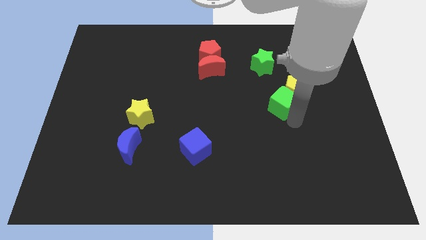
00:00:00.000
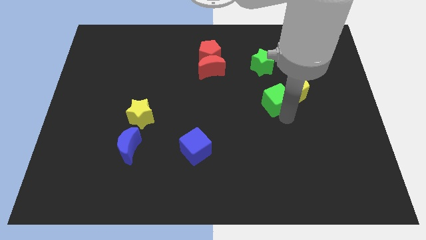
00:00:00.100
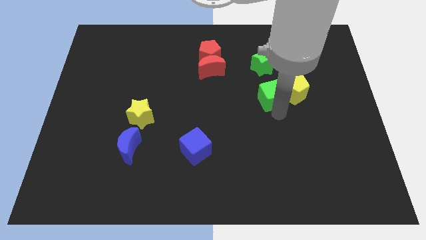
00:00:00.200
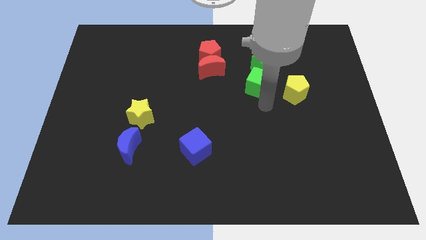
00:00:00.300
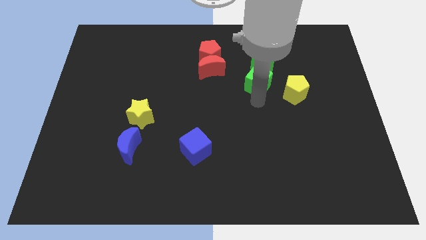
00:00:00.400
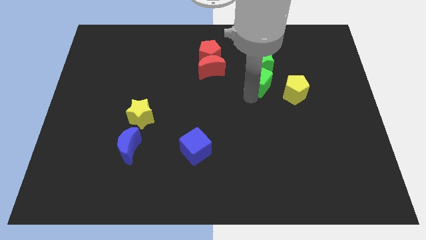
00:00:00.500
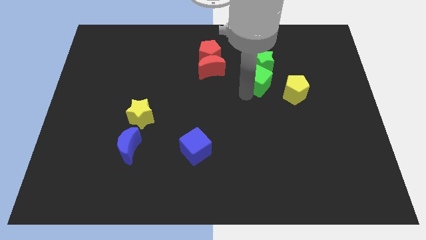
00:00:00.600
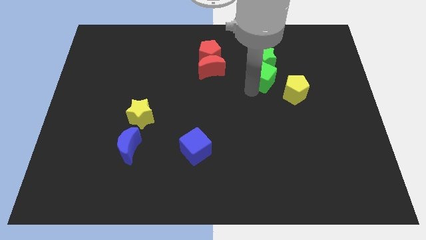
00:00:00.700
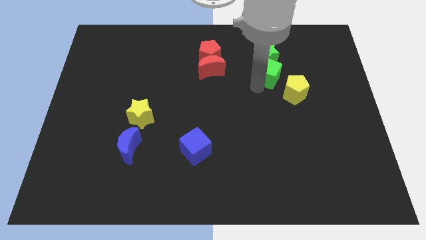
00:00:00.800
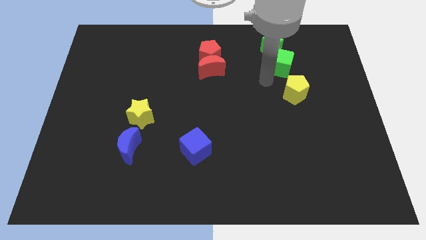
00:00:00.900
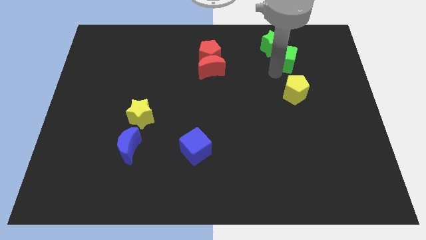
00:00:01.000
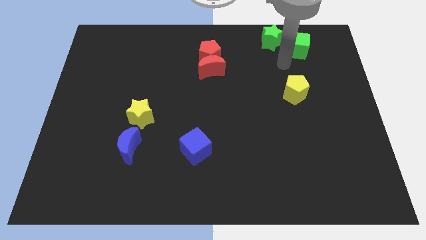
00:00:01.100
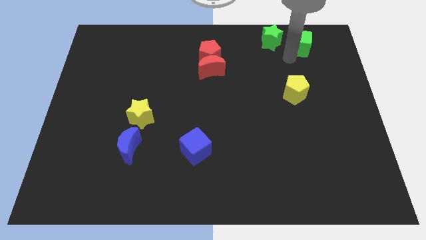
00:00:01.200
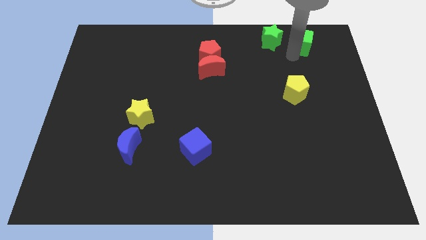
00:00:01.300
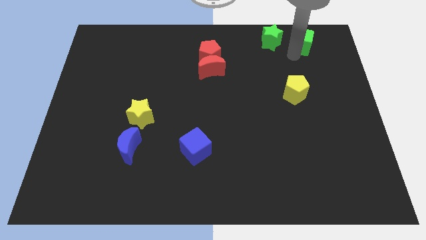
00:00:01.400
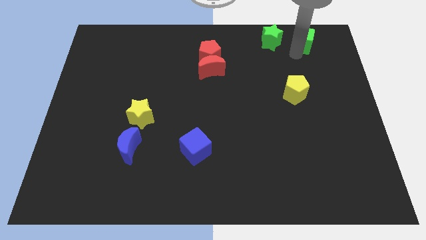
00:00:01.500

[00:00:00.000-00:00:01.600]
place the green cube parallel right to the green star

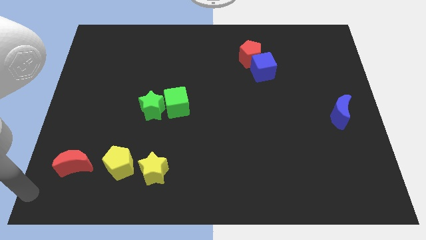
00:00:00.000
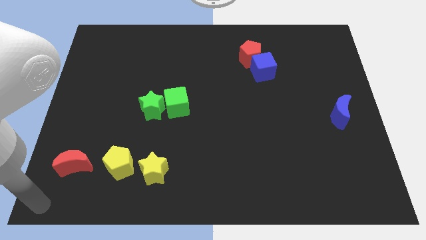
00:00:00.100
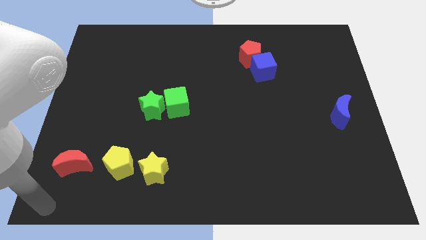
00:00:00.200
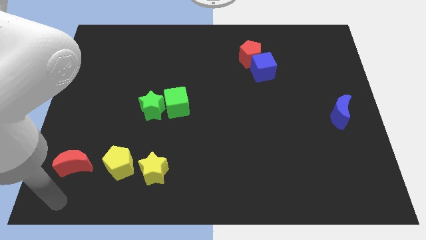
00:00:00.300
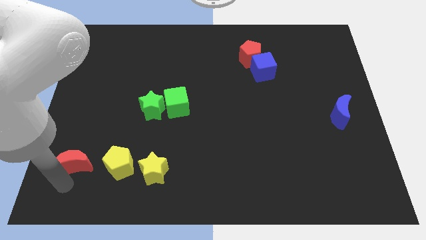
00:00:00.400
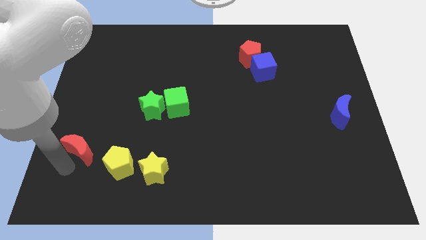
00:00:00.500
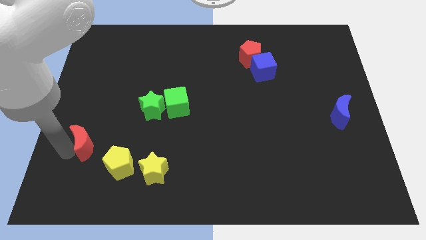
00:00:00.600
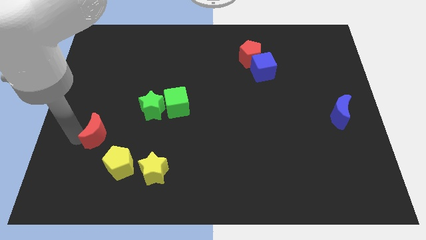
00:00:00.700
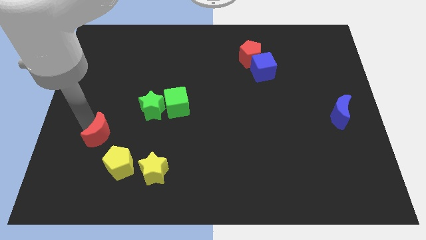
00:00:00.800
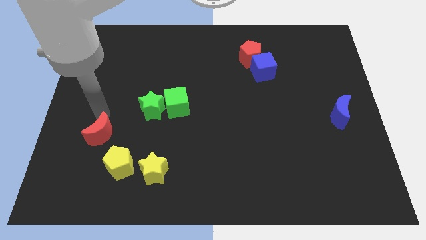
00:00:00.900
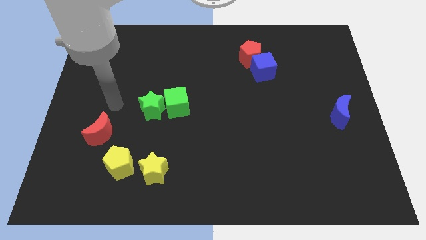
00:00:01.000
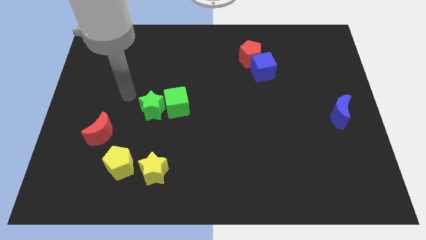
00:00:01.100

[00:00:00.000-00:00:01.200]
place the red moon diagonally top left to the yellow pentagon

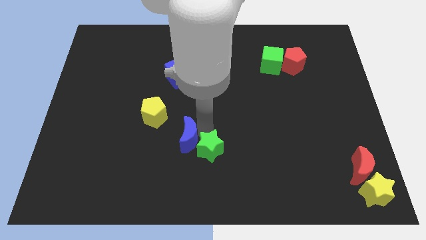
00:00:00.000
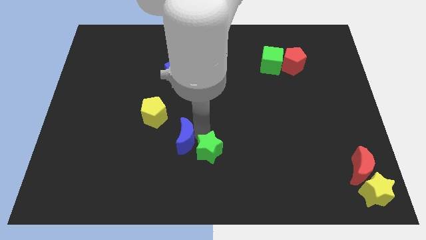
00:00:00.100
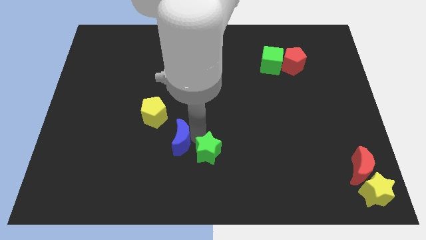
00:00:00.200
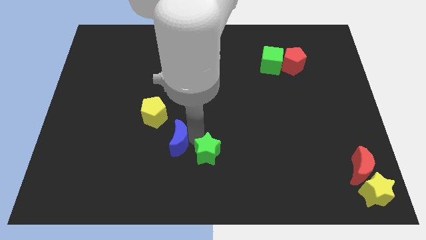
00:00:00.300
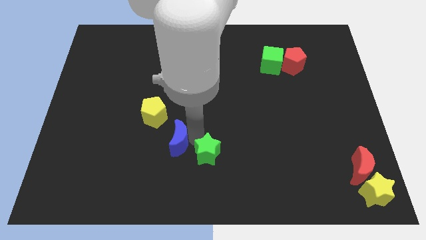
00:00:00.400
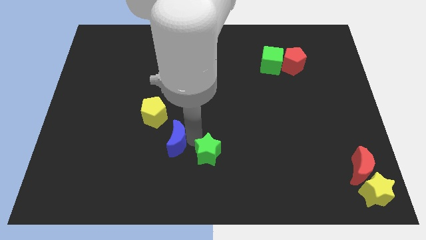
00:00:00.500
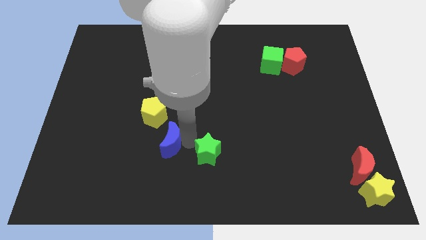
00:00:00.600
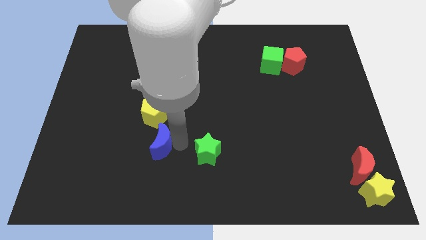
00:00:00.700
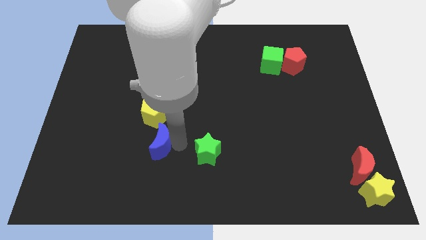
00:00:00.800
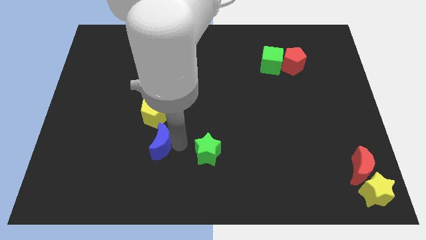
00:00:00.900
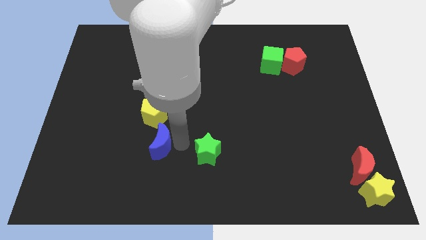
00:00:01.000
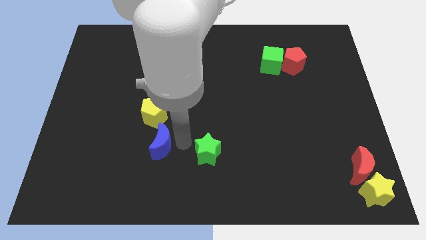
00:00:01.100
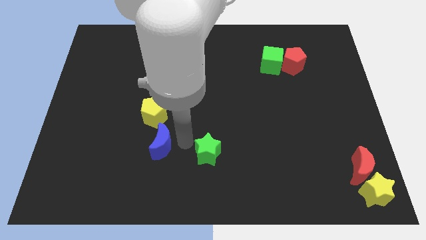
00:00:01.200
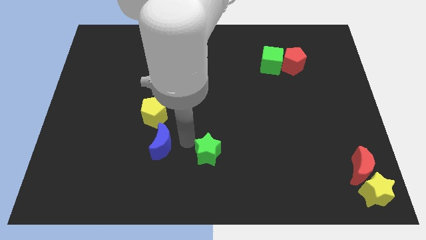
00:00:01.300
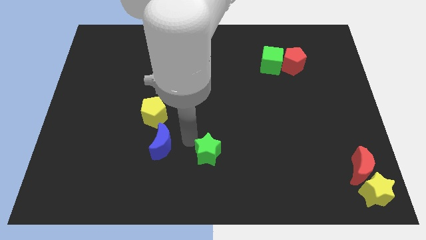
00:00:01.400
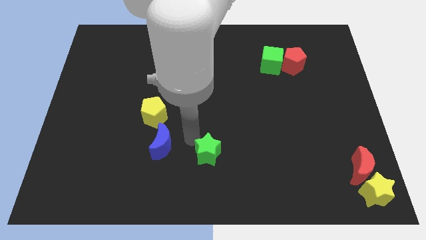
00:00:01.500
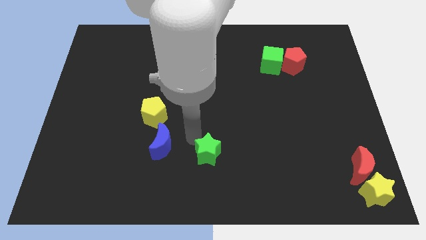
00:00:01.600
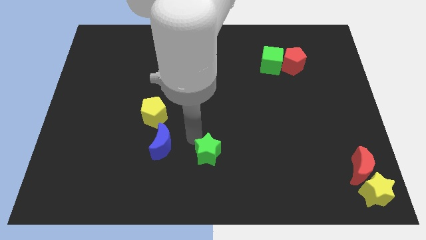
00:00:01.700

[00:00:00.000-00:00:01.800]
move the blue moon to the bottom of the yellow pentagon

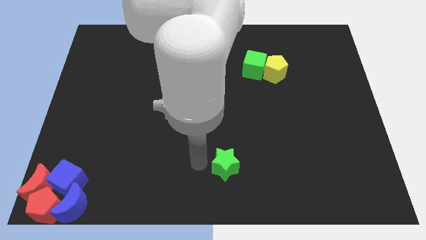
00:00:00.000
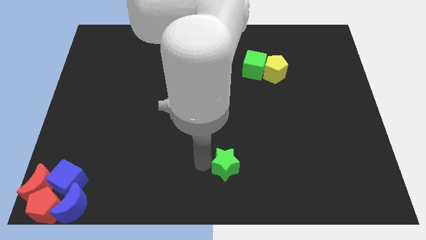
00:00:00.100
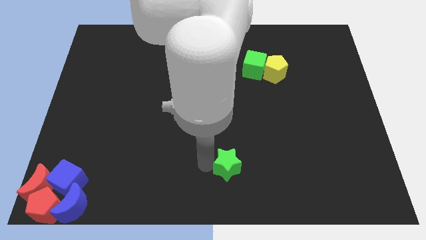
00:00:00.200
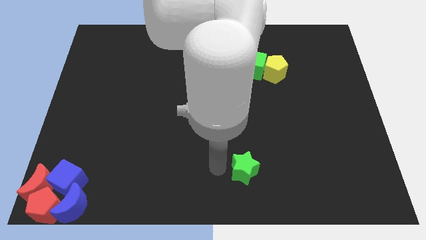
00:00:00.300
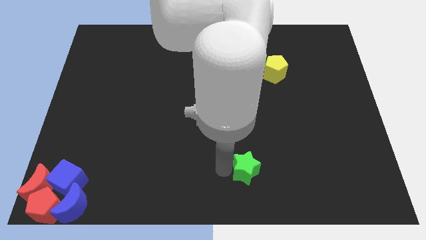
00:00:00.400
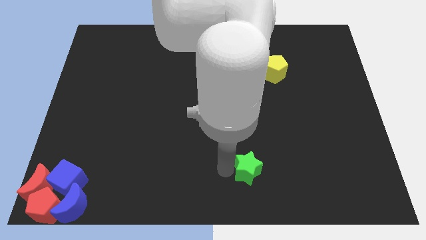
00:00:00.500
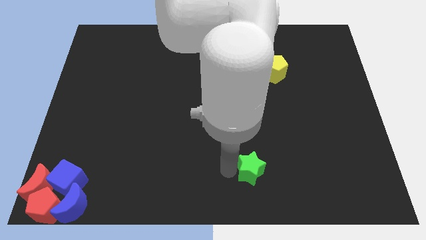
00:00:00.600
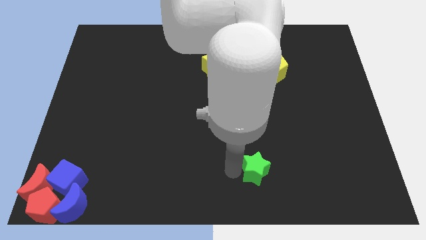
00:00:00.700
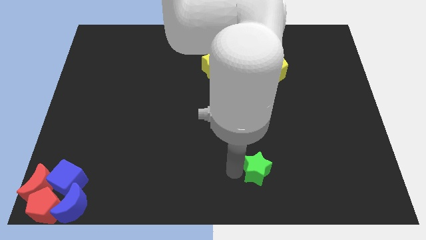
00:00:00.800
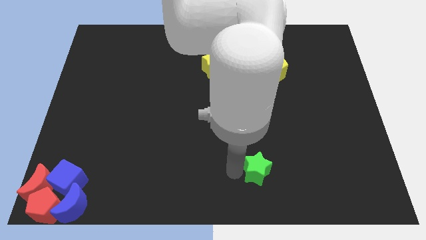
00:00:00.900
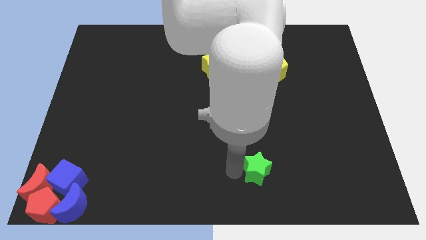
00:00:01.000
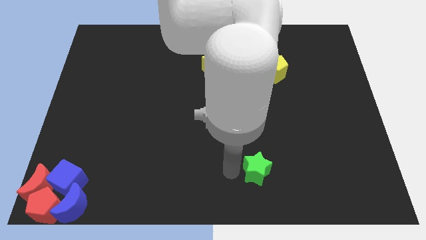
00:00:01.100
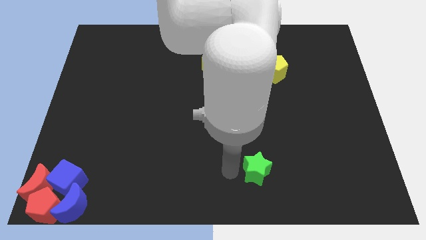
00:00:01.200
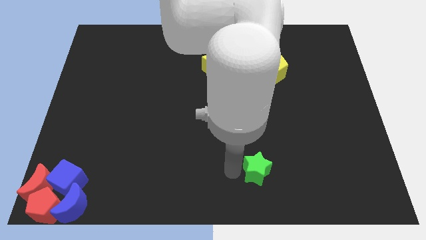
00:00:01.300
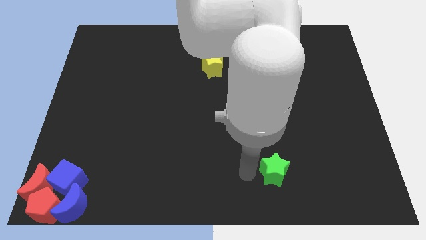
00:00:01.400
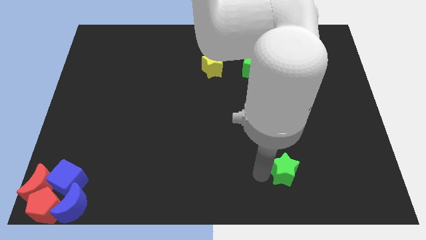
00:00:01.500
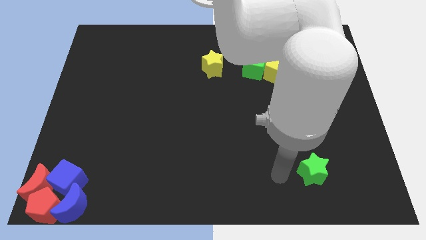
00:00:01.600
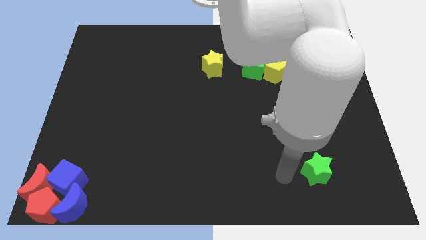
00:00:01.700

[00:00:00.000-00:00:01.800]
move the green star to the right of the board

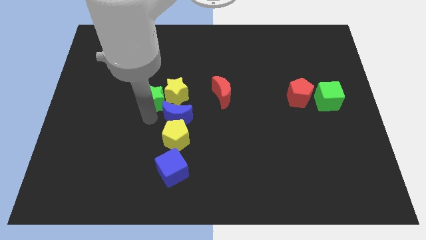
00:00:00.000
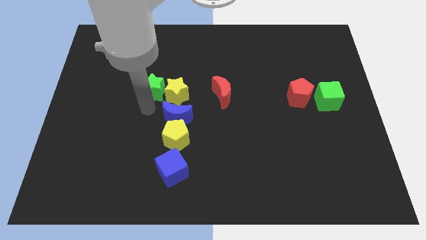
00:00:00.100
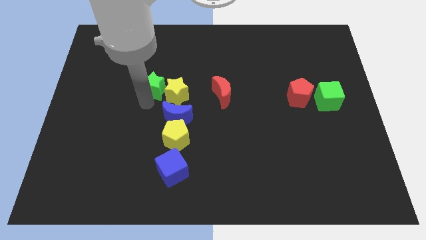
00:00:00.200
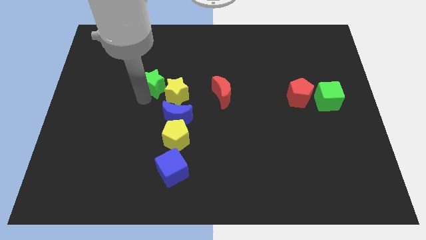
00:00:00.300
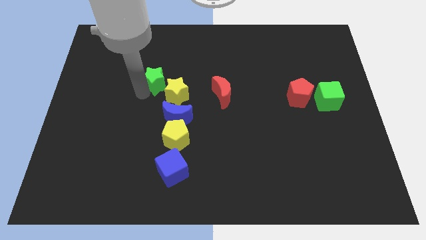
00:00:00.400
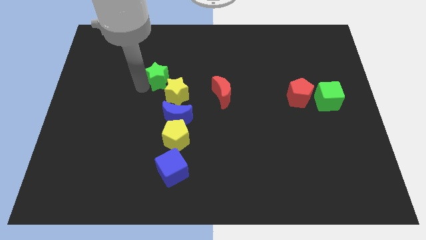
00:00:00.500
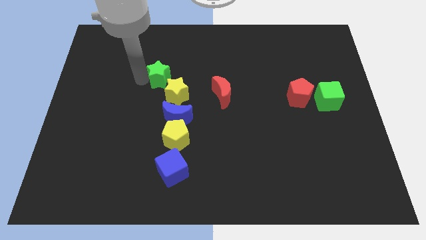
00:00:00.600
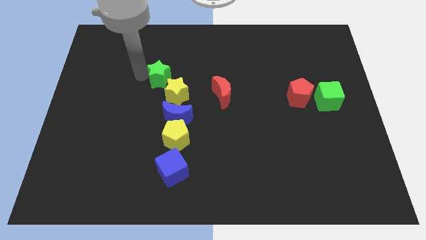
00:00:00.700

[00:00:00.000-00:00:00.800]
push the green star upwards

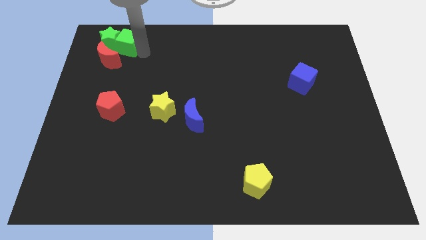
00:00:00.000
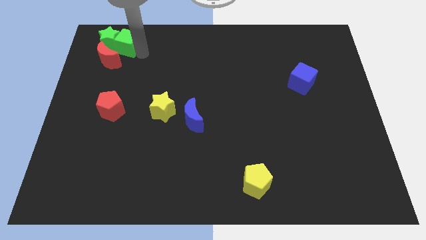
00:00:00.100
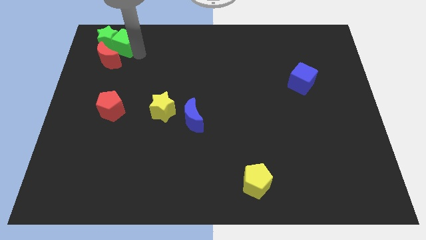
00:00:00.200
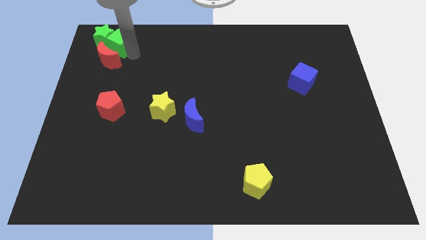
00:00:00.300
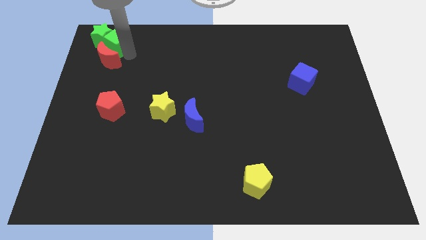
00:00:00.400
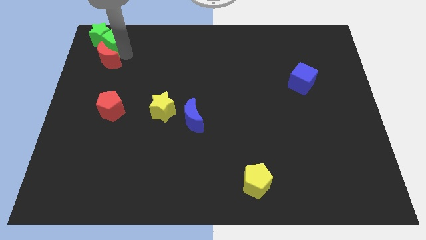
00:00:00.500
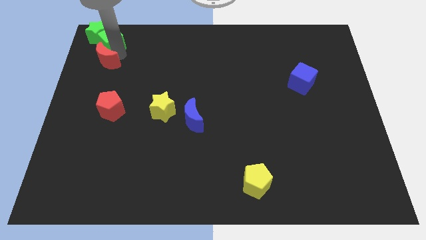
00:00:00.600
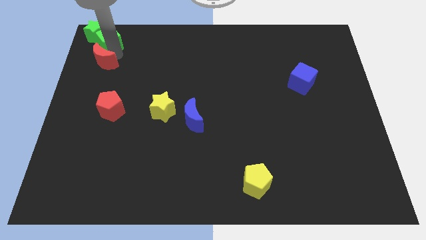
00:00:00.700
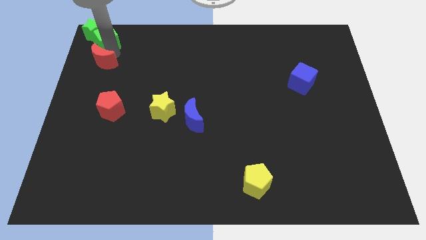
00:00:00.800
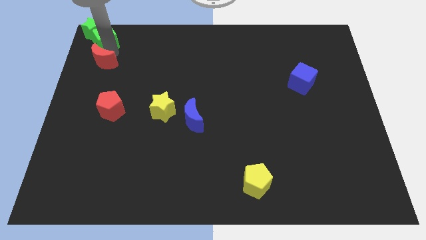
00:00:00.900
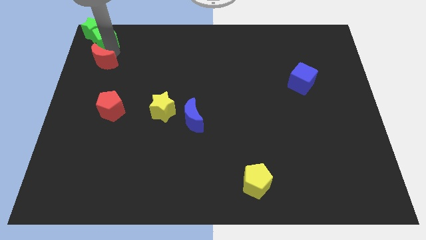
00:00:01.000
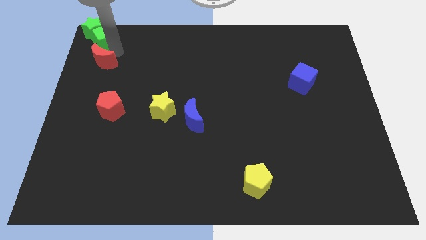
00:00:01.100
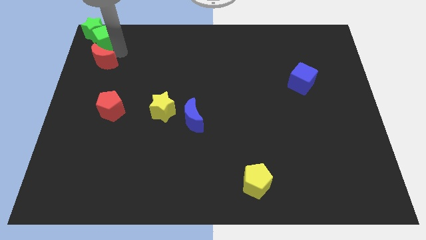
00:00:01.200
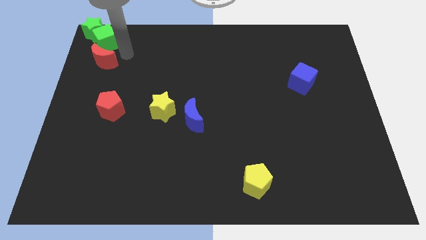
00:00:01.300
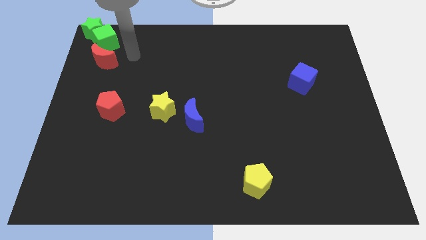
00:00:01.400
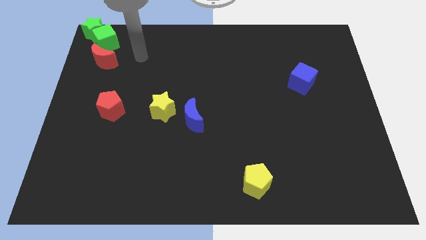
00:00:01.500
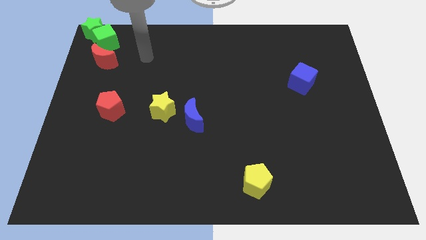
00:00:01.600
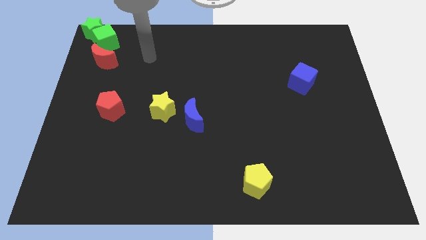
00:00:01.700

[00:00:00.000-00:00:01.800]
push green cube to the top left

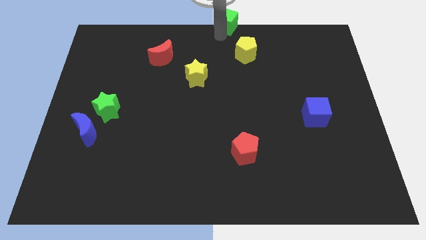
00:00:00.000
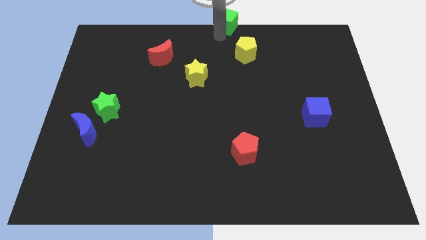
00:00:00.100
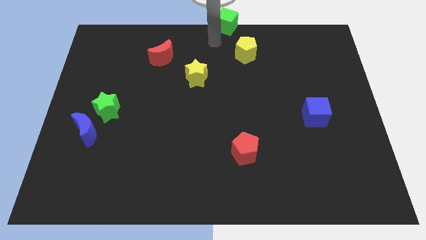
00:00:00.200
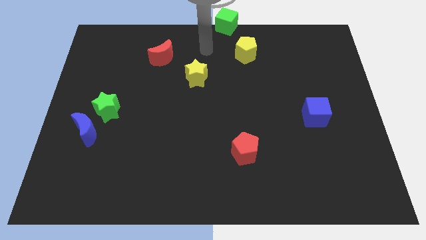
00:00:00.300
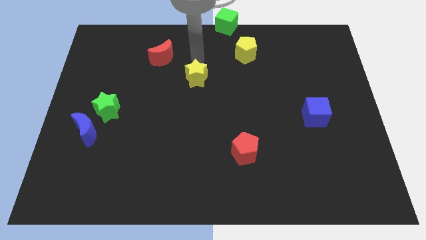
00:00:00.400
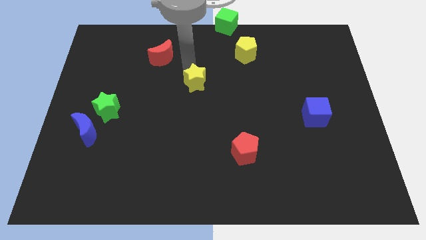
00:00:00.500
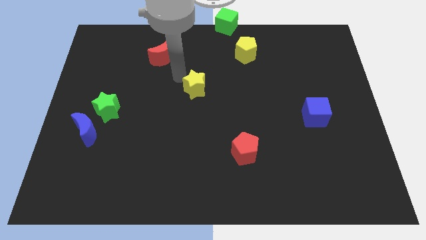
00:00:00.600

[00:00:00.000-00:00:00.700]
move your arm into the yellow star
